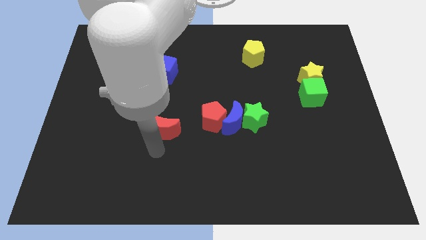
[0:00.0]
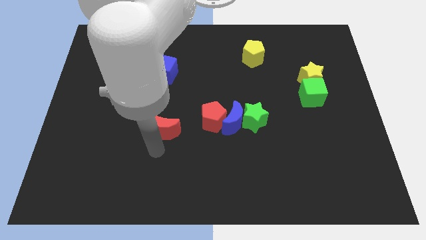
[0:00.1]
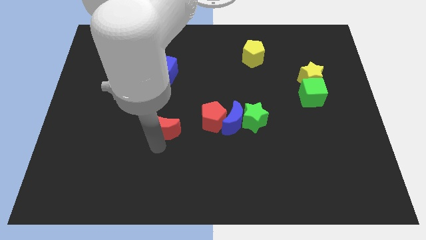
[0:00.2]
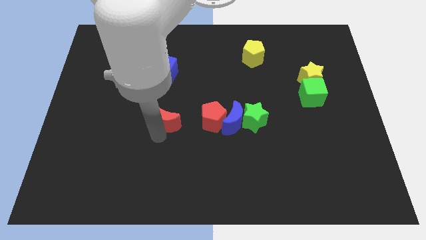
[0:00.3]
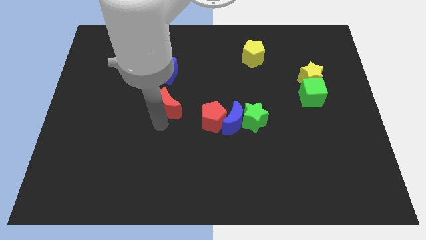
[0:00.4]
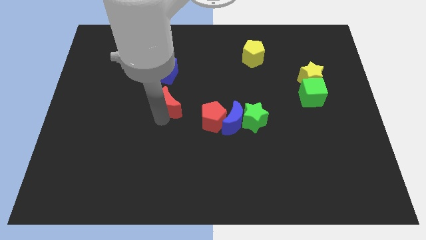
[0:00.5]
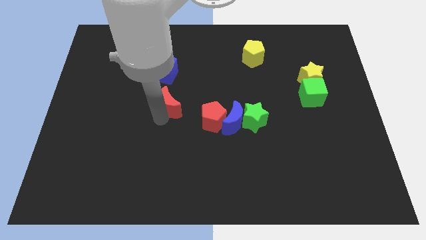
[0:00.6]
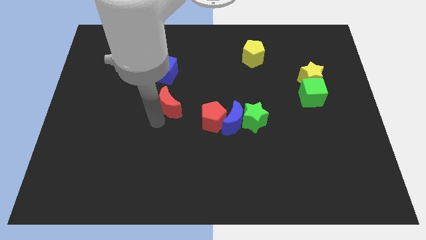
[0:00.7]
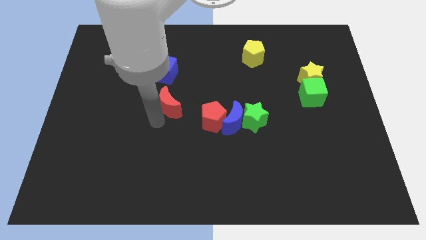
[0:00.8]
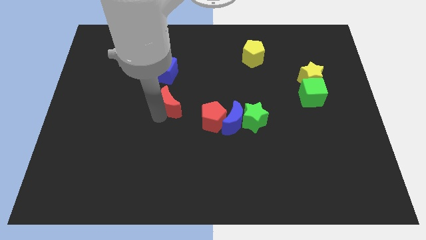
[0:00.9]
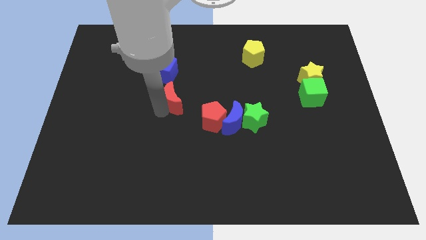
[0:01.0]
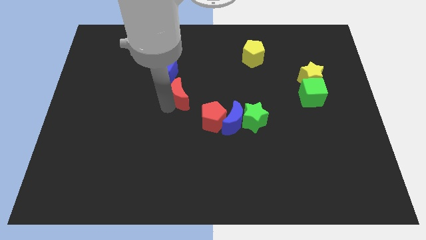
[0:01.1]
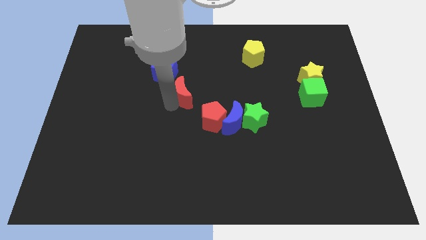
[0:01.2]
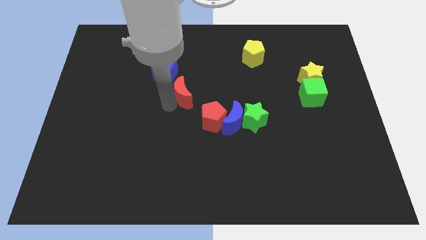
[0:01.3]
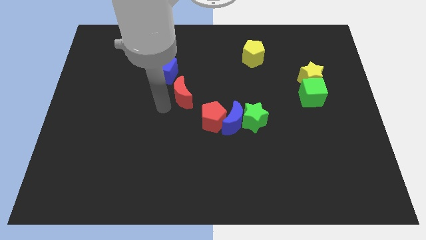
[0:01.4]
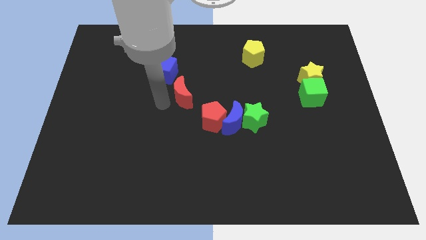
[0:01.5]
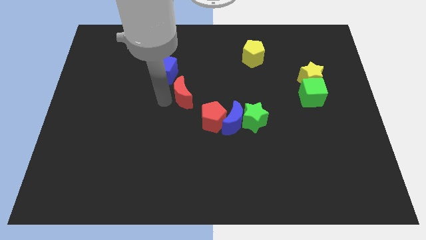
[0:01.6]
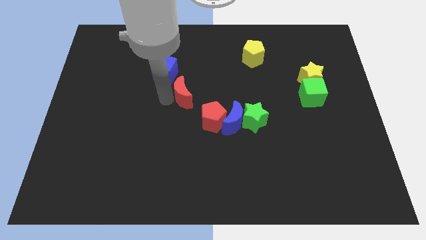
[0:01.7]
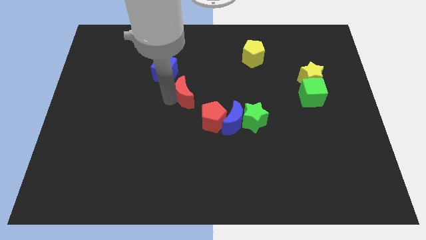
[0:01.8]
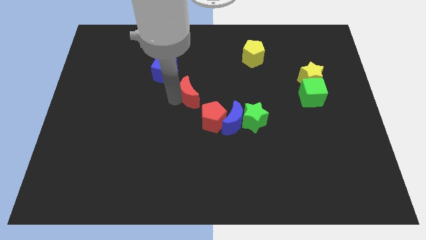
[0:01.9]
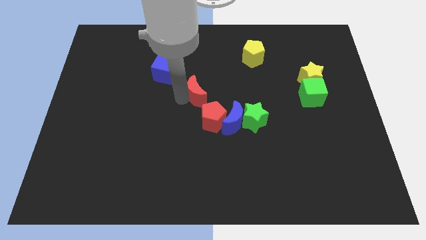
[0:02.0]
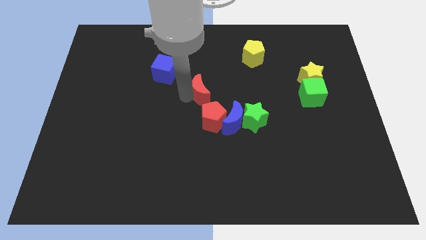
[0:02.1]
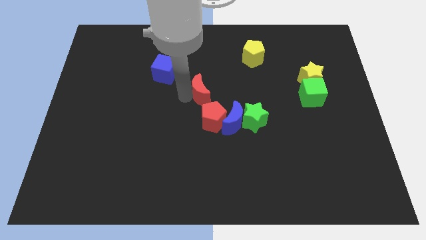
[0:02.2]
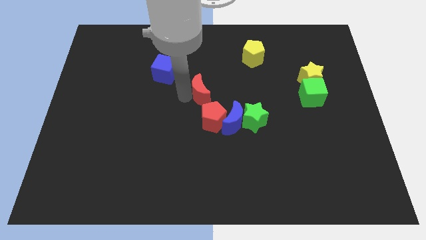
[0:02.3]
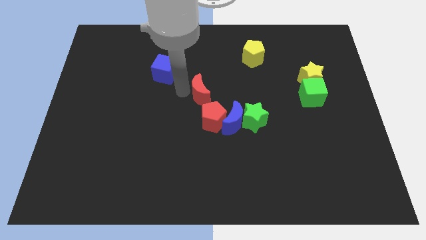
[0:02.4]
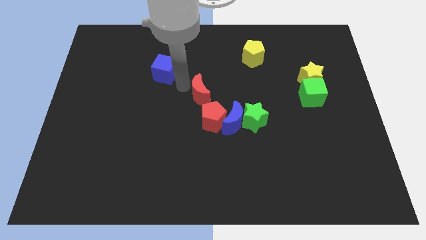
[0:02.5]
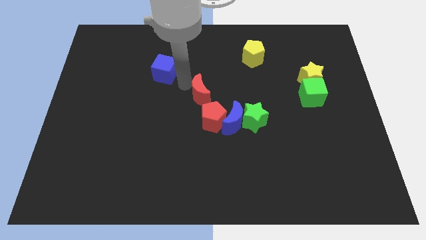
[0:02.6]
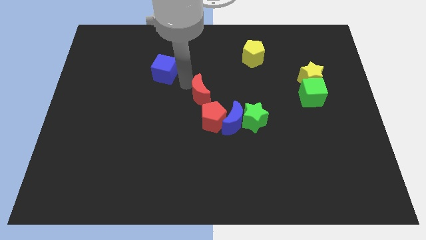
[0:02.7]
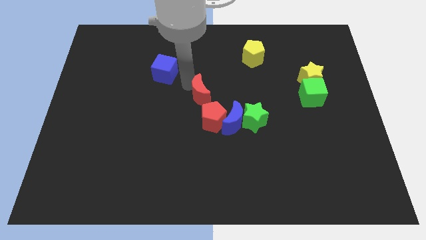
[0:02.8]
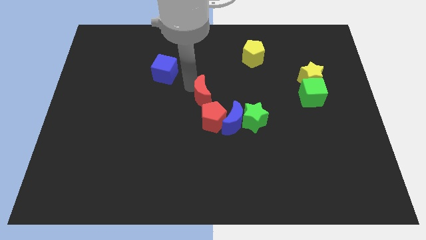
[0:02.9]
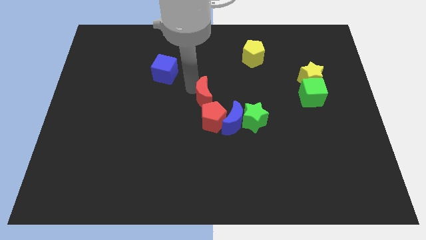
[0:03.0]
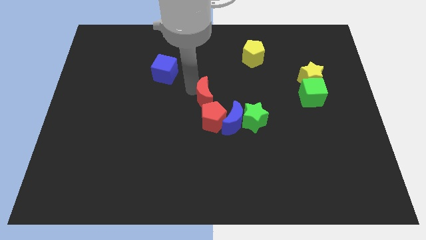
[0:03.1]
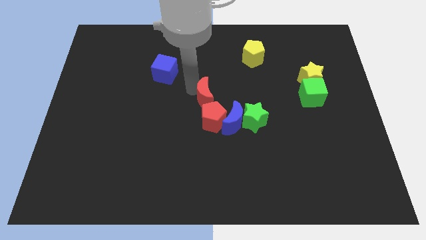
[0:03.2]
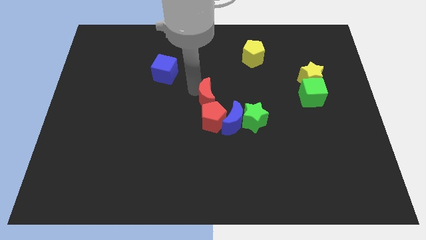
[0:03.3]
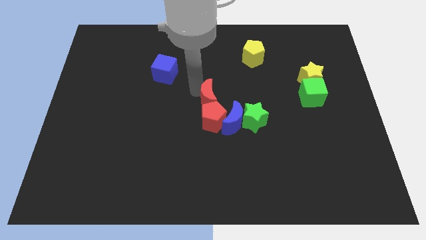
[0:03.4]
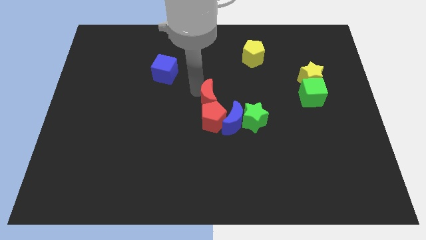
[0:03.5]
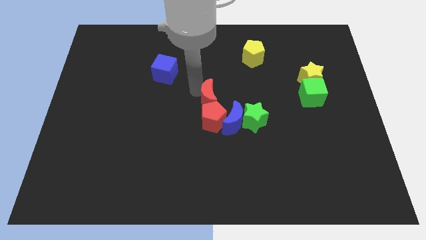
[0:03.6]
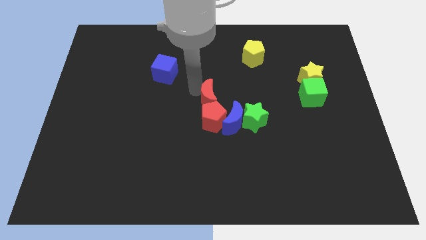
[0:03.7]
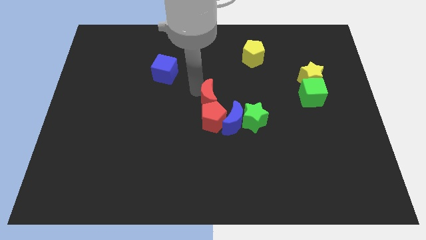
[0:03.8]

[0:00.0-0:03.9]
place the red crescent above the red pentagon

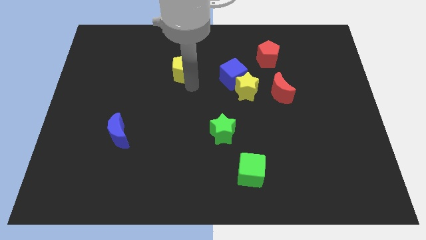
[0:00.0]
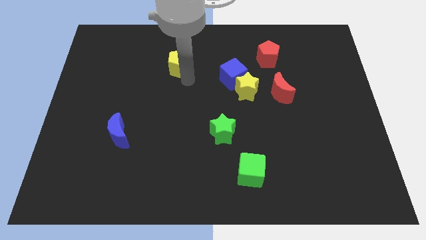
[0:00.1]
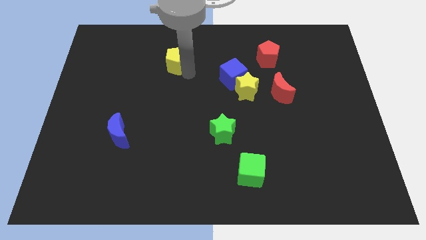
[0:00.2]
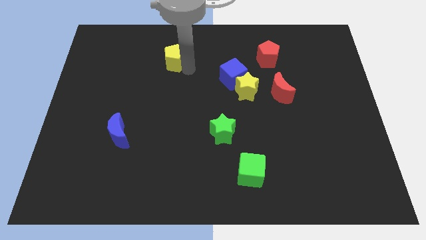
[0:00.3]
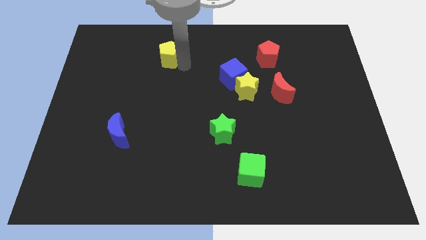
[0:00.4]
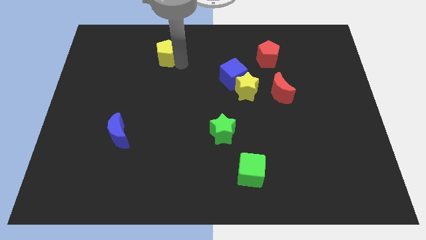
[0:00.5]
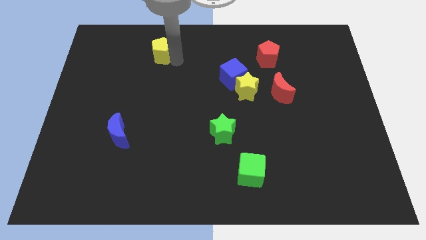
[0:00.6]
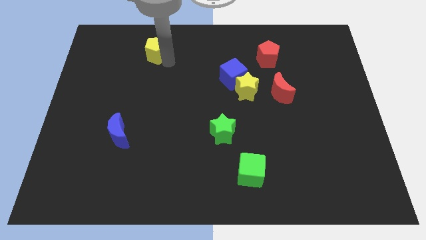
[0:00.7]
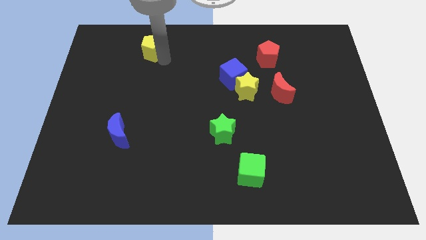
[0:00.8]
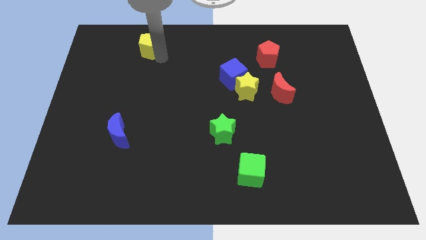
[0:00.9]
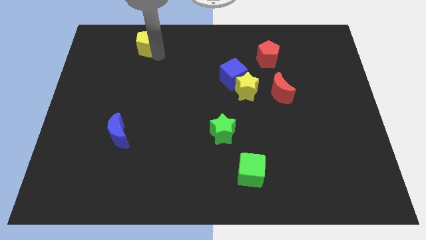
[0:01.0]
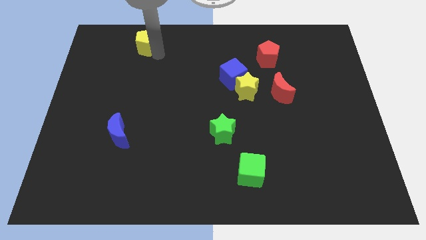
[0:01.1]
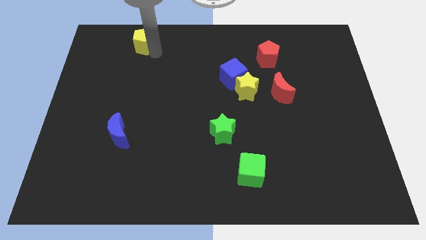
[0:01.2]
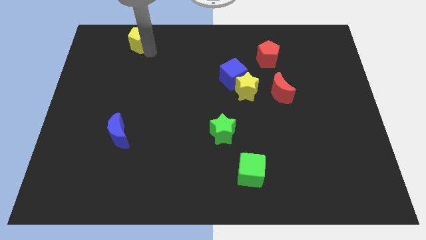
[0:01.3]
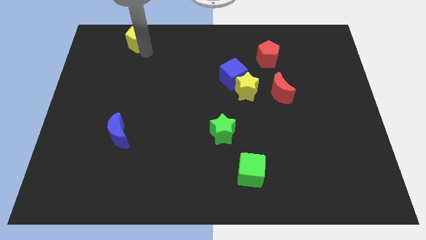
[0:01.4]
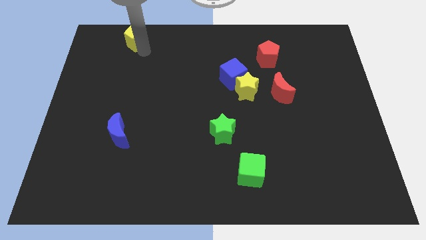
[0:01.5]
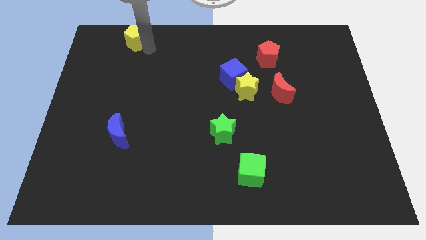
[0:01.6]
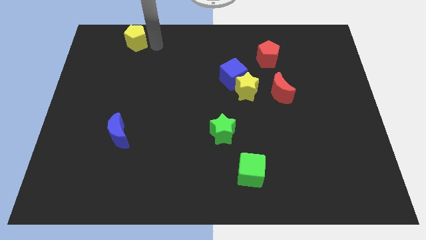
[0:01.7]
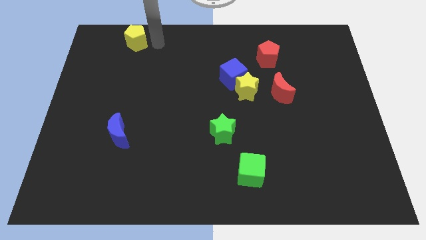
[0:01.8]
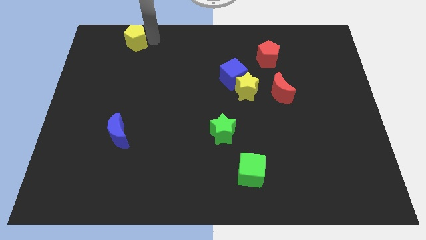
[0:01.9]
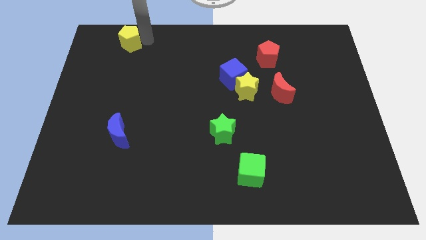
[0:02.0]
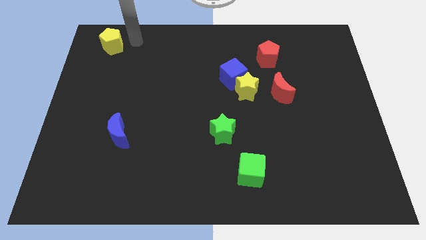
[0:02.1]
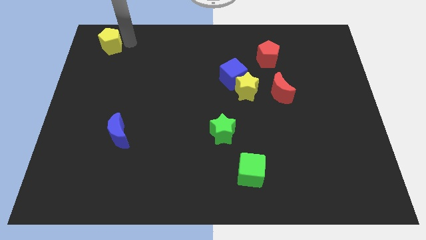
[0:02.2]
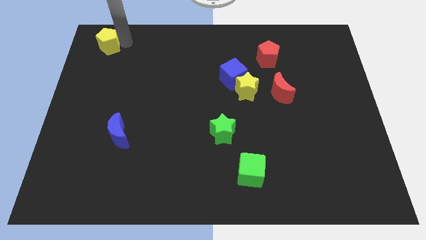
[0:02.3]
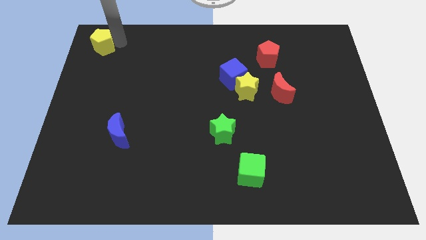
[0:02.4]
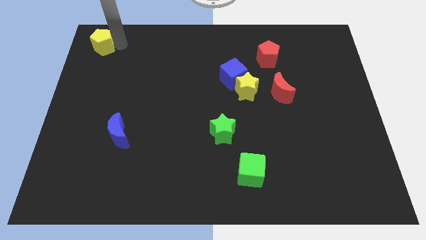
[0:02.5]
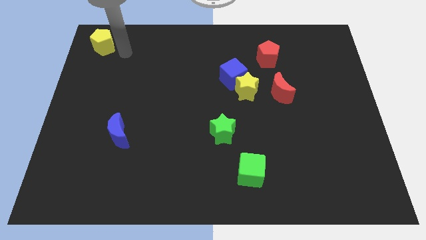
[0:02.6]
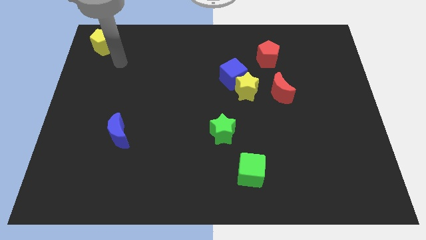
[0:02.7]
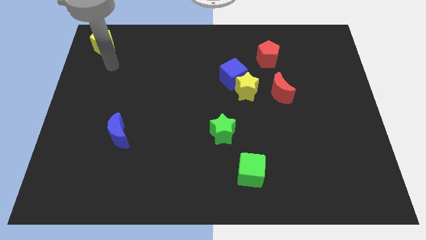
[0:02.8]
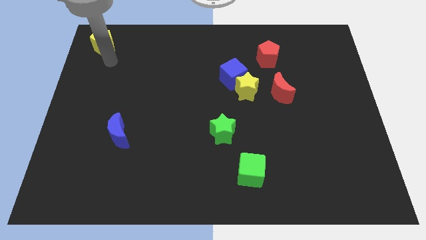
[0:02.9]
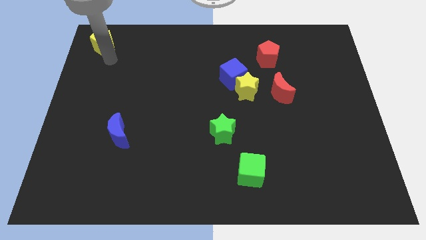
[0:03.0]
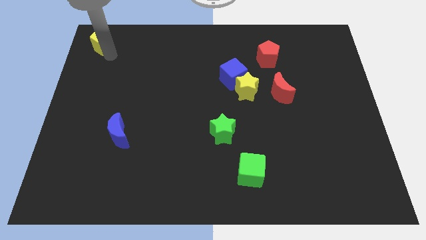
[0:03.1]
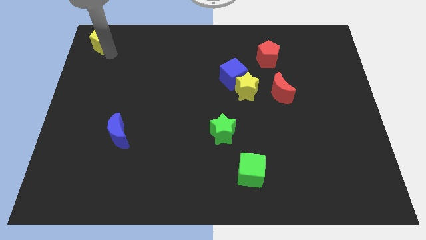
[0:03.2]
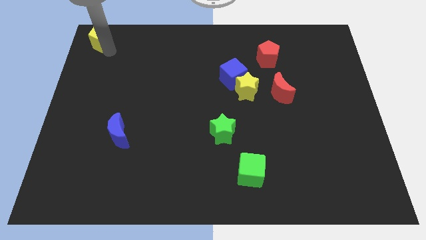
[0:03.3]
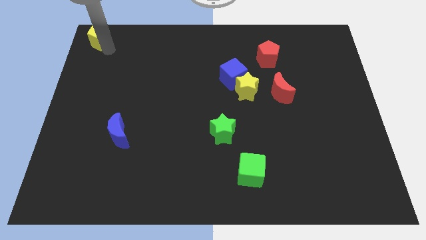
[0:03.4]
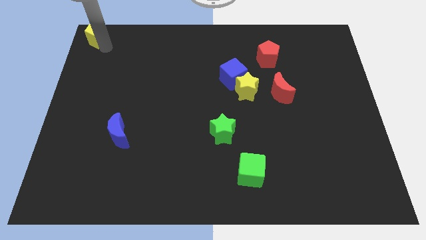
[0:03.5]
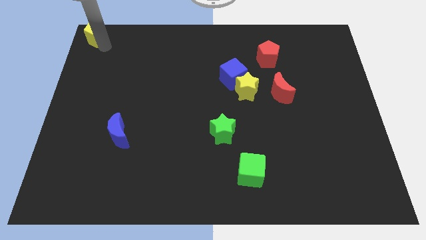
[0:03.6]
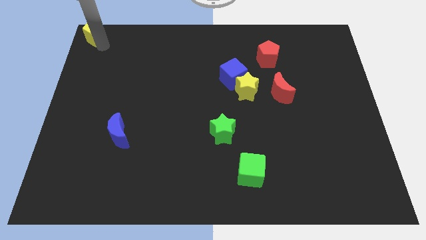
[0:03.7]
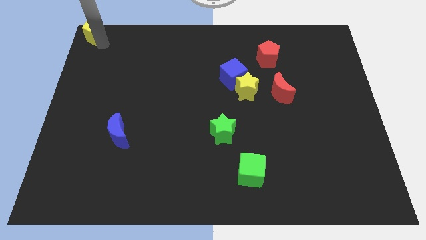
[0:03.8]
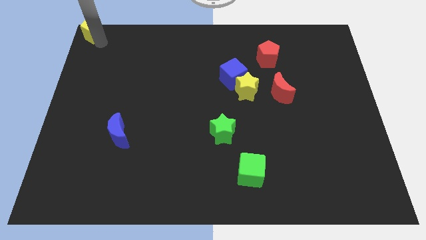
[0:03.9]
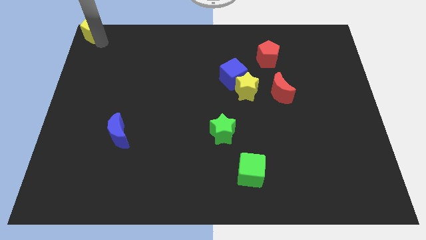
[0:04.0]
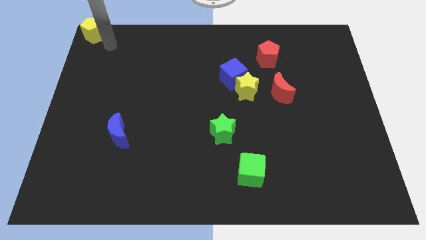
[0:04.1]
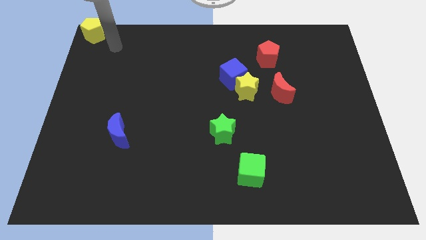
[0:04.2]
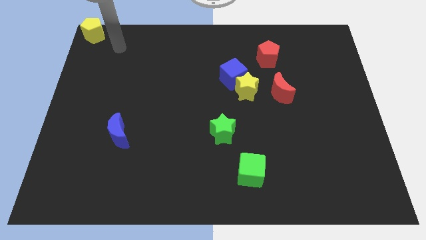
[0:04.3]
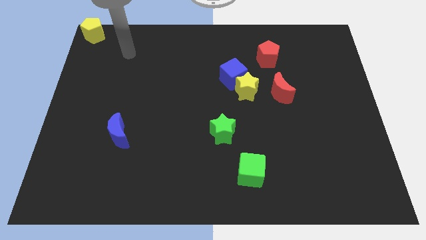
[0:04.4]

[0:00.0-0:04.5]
move the yellow pentagon to the left top corner of the board

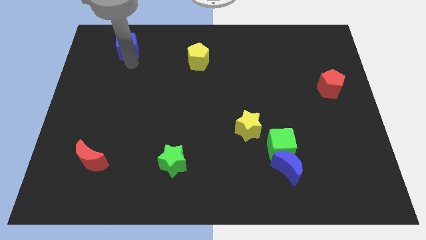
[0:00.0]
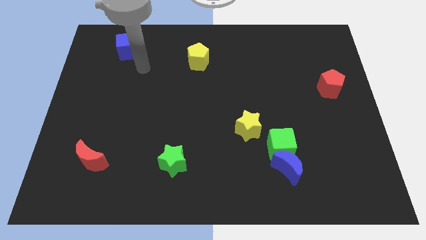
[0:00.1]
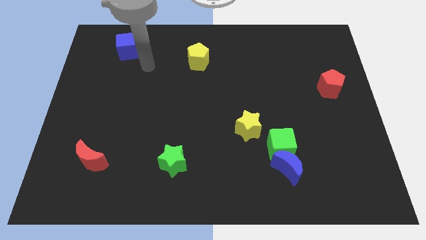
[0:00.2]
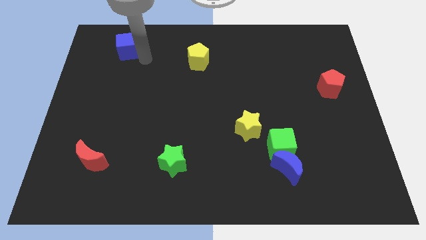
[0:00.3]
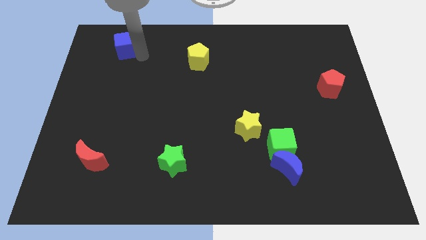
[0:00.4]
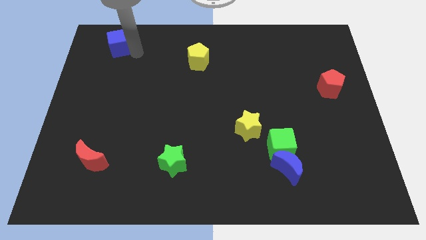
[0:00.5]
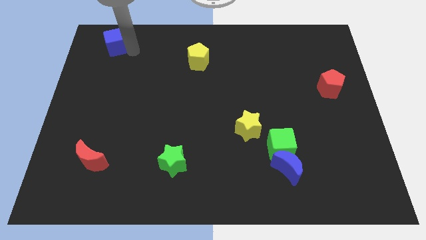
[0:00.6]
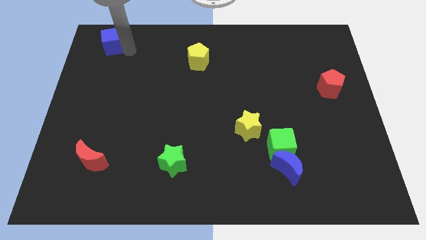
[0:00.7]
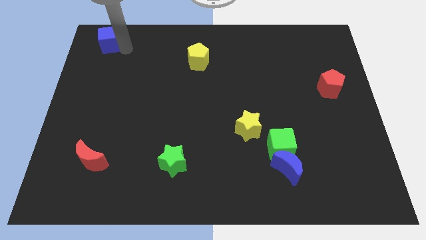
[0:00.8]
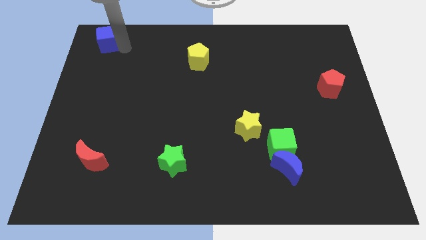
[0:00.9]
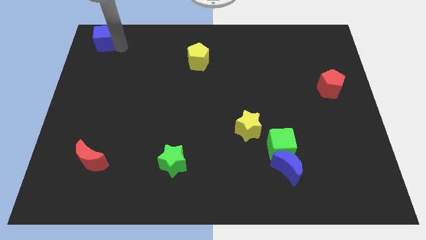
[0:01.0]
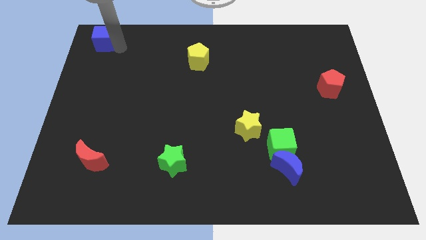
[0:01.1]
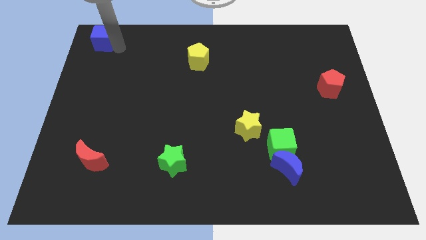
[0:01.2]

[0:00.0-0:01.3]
push the blue cube towards top left
